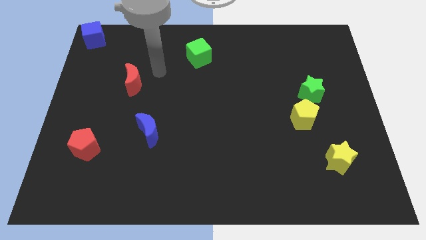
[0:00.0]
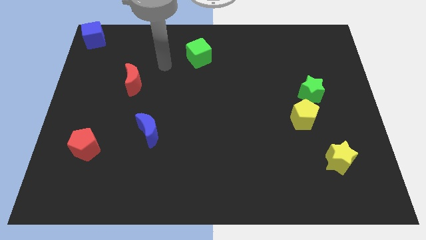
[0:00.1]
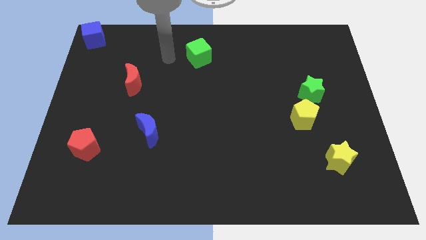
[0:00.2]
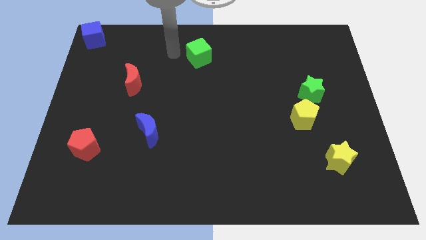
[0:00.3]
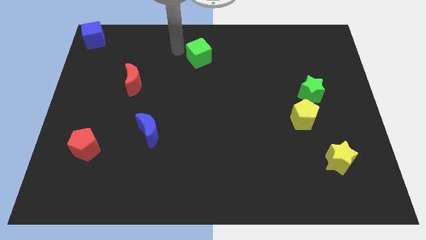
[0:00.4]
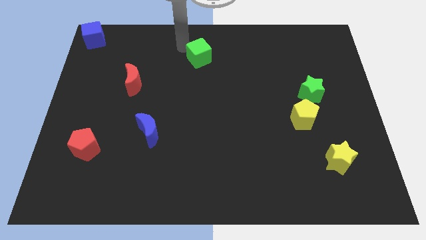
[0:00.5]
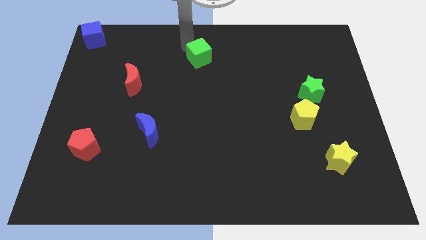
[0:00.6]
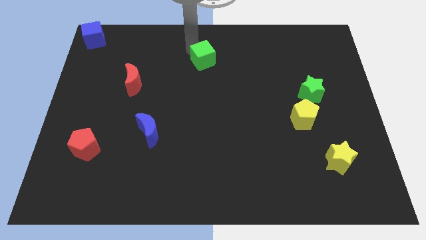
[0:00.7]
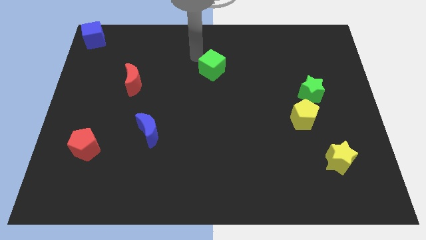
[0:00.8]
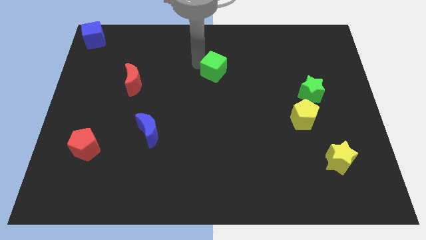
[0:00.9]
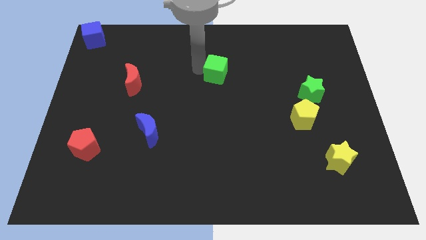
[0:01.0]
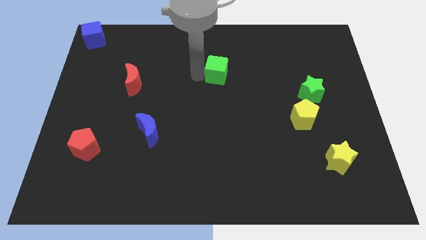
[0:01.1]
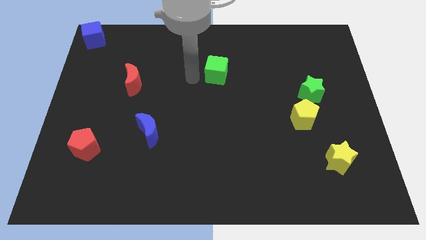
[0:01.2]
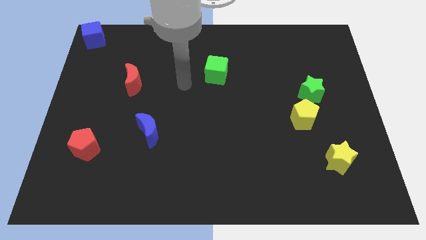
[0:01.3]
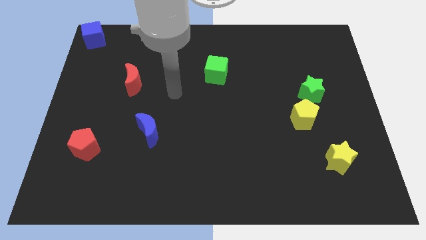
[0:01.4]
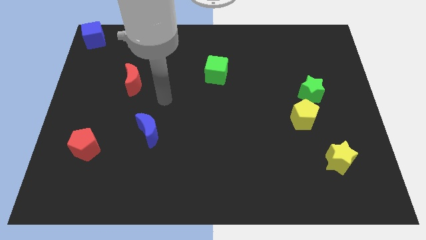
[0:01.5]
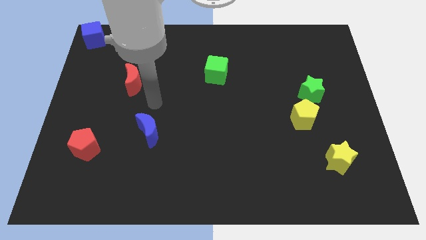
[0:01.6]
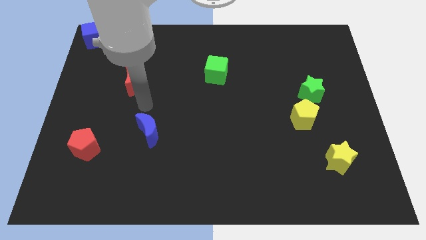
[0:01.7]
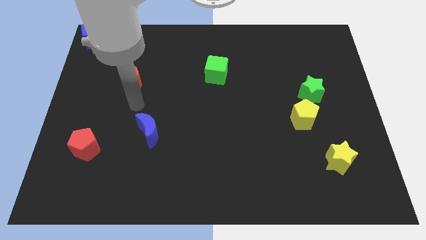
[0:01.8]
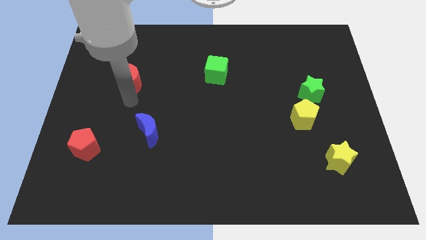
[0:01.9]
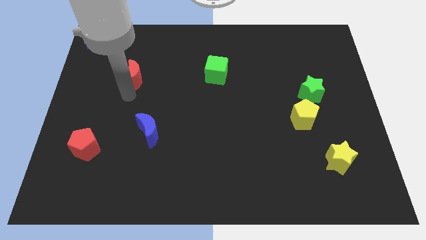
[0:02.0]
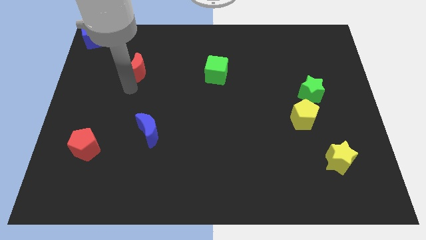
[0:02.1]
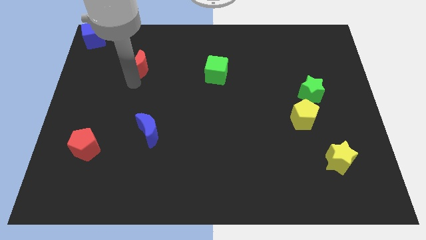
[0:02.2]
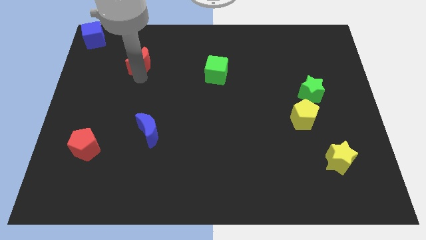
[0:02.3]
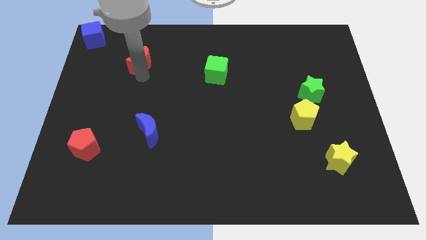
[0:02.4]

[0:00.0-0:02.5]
push the green cube towards the center of the board

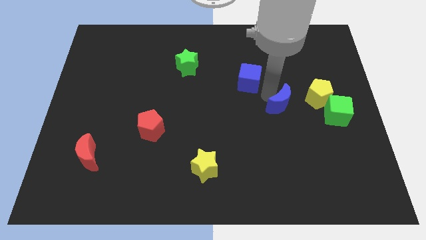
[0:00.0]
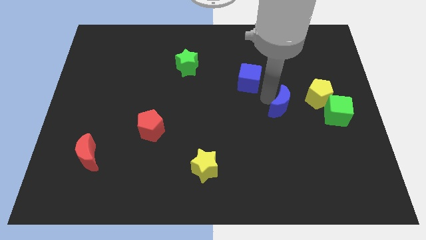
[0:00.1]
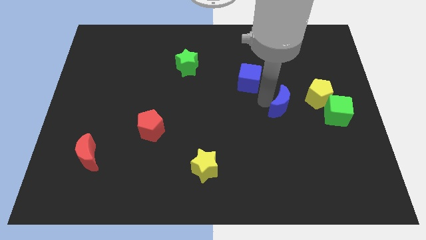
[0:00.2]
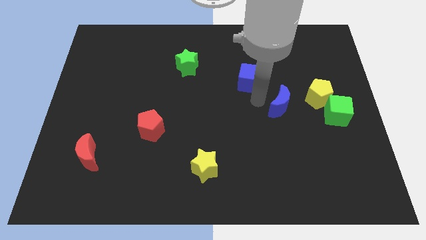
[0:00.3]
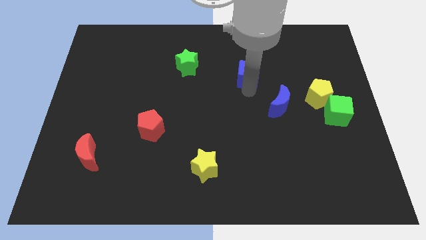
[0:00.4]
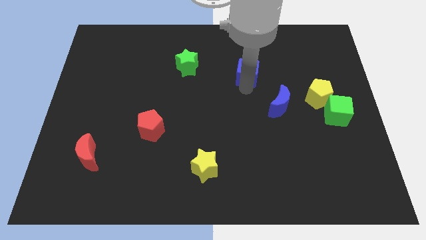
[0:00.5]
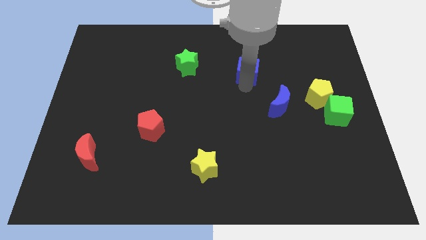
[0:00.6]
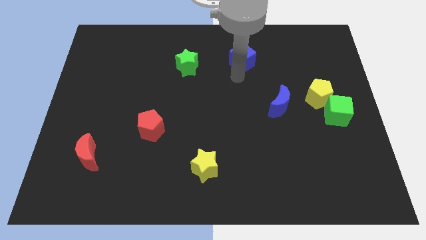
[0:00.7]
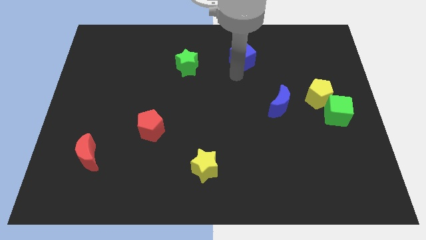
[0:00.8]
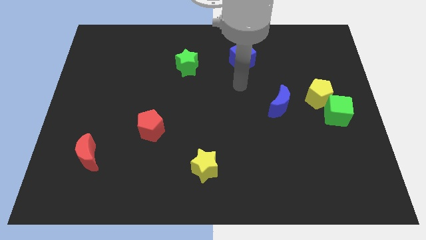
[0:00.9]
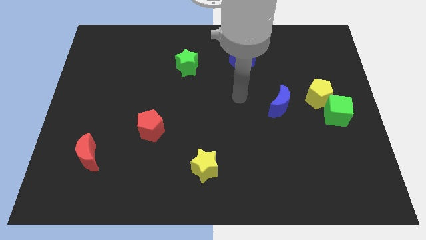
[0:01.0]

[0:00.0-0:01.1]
push the blue cube to the right of the green star

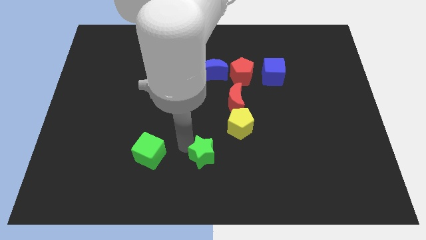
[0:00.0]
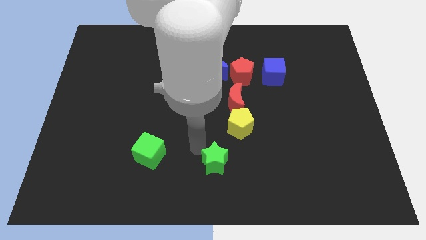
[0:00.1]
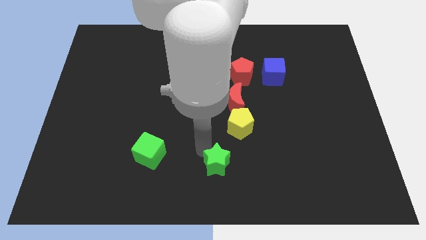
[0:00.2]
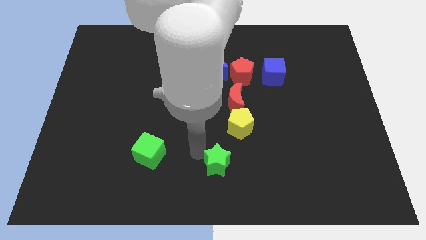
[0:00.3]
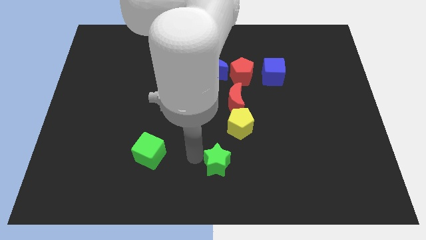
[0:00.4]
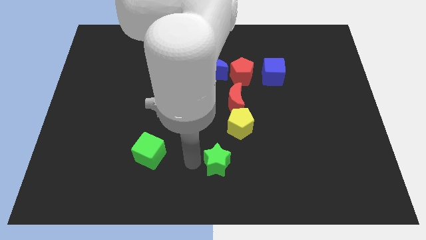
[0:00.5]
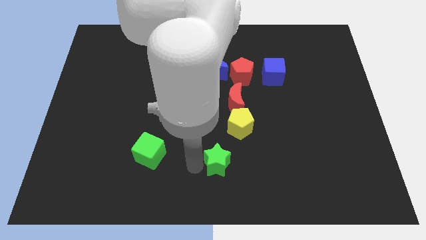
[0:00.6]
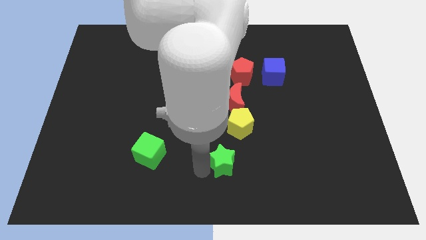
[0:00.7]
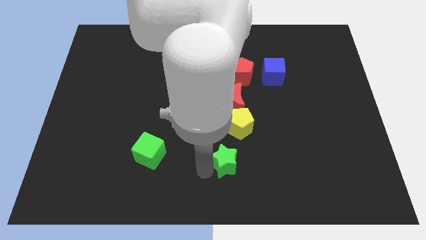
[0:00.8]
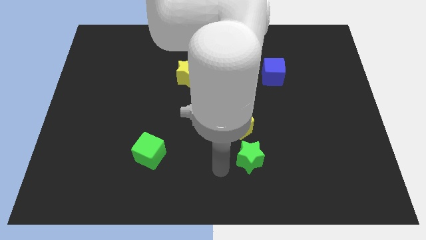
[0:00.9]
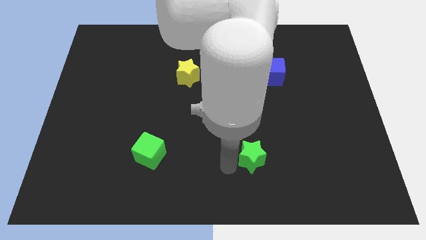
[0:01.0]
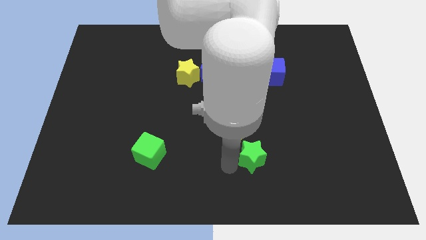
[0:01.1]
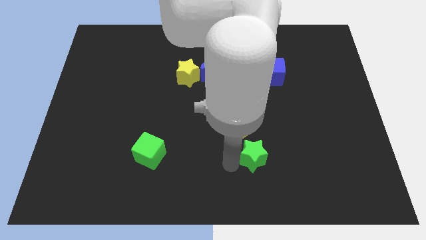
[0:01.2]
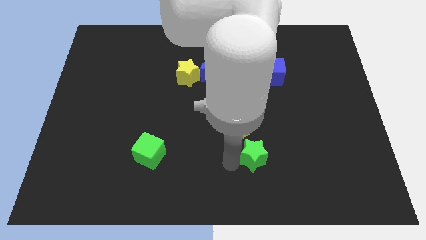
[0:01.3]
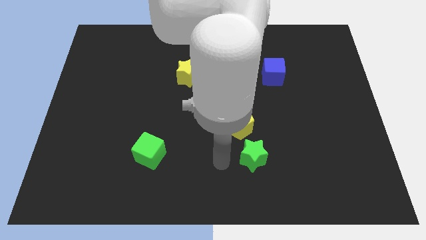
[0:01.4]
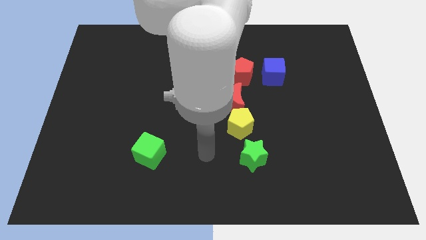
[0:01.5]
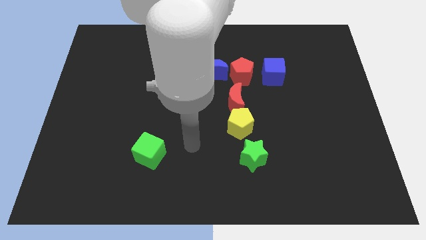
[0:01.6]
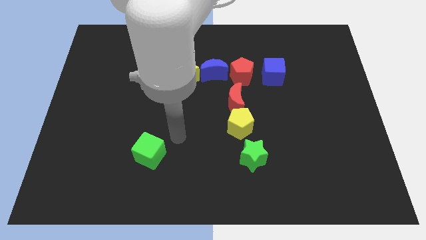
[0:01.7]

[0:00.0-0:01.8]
move the green star to the bottom of the yellow pentagon

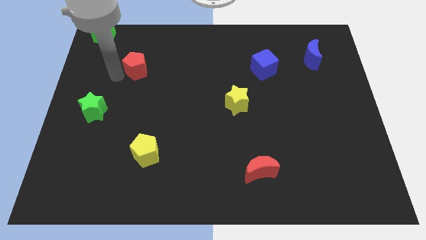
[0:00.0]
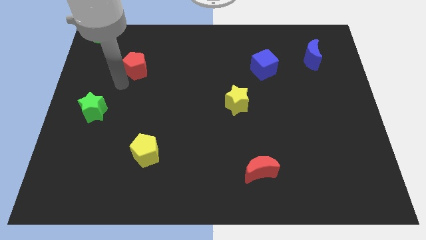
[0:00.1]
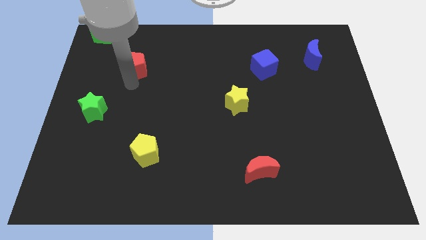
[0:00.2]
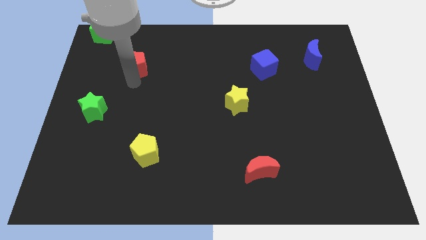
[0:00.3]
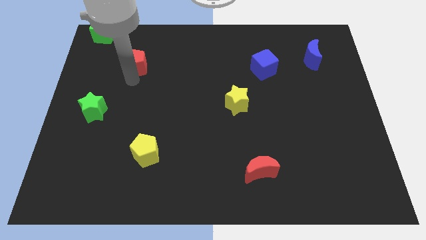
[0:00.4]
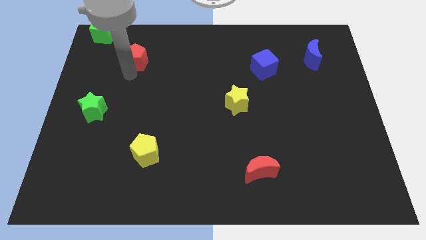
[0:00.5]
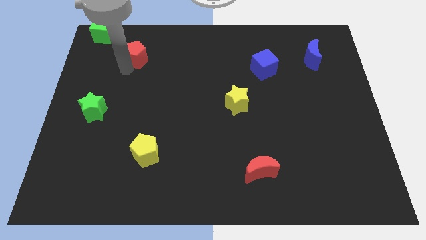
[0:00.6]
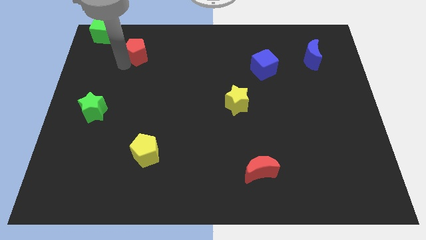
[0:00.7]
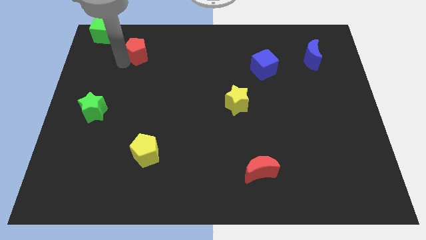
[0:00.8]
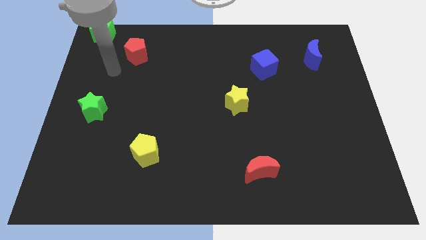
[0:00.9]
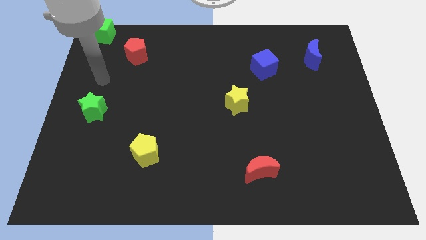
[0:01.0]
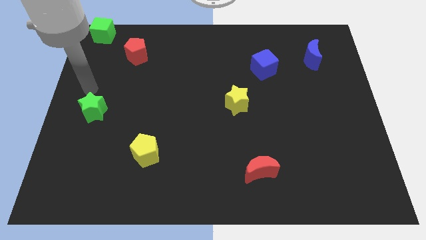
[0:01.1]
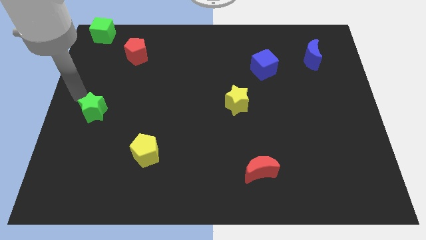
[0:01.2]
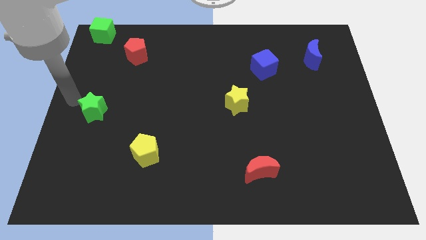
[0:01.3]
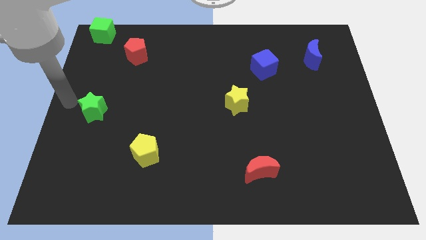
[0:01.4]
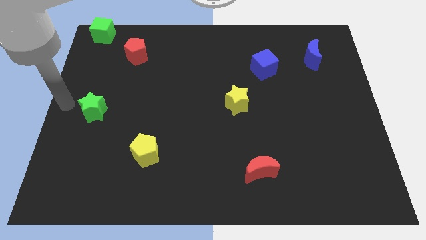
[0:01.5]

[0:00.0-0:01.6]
slightly push the red pentagon upwards

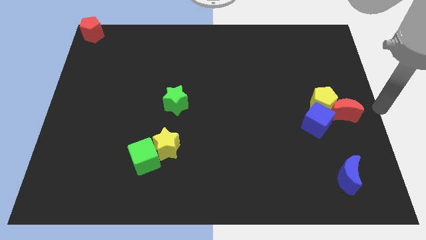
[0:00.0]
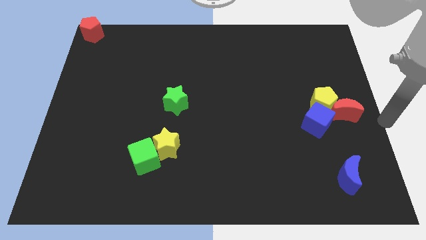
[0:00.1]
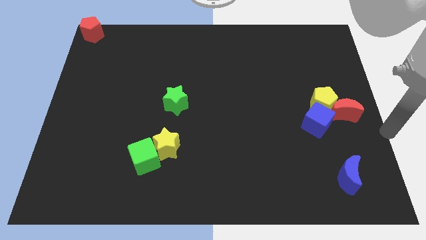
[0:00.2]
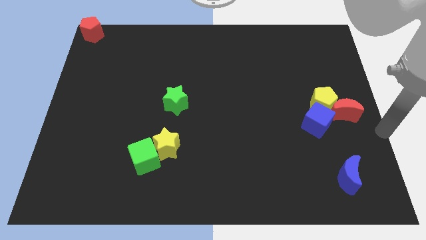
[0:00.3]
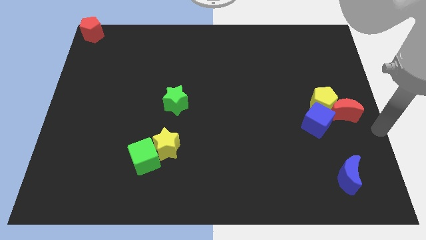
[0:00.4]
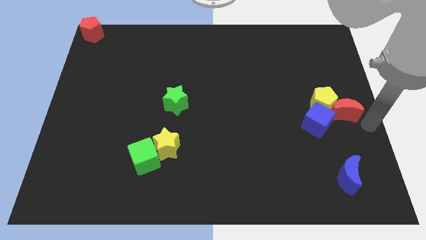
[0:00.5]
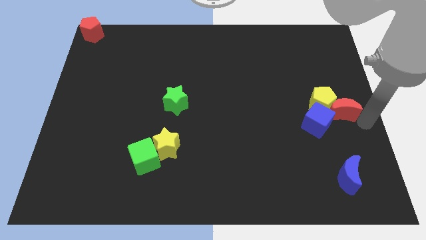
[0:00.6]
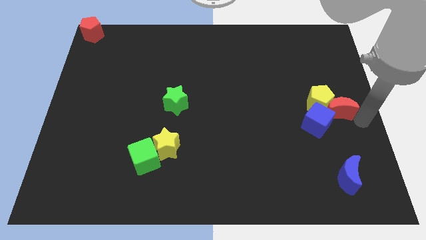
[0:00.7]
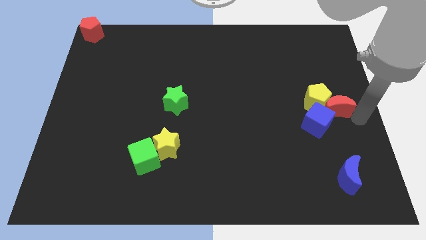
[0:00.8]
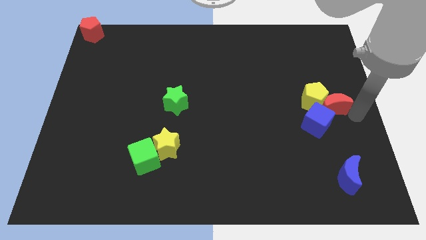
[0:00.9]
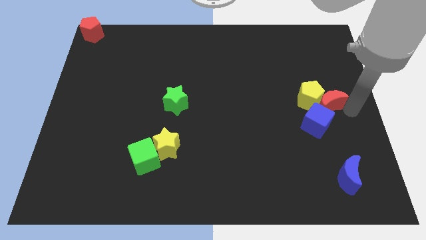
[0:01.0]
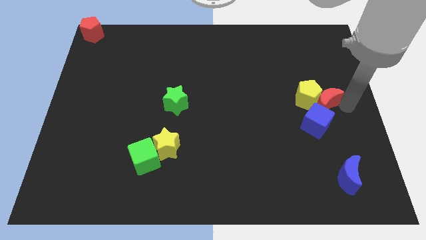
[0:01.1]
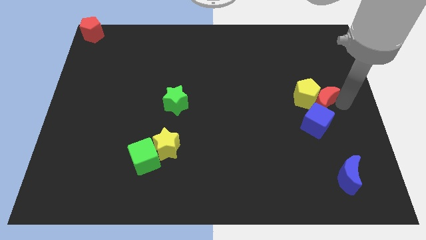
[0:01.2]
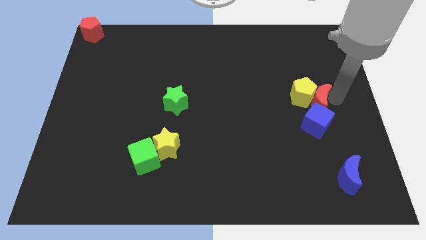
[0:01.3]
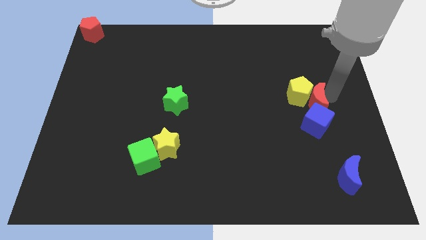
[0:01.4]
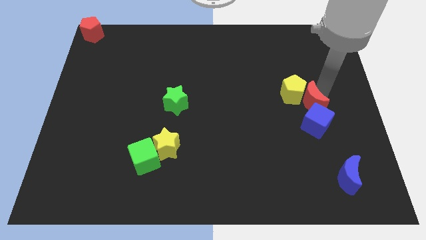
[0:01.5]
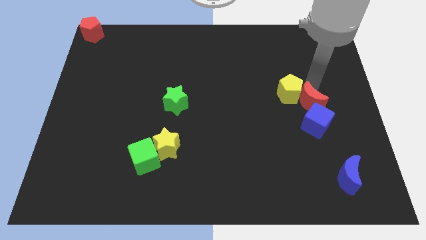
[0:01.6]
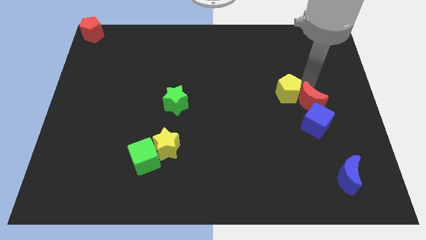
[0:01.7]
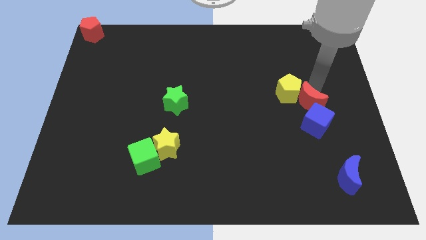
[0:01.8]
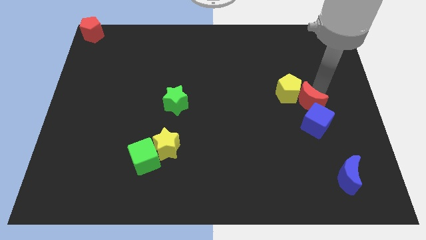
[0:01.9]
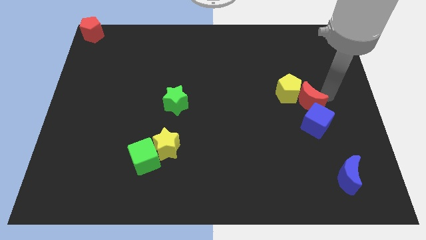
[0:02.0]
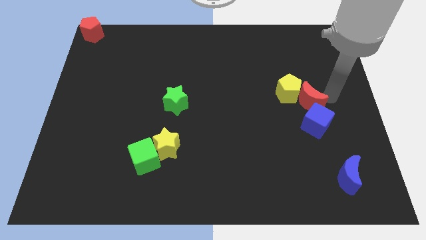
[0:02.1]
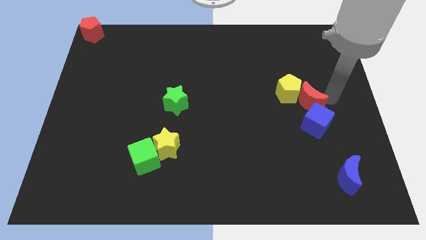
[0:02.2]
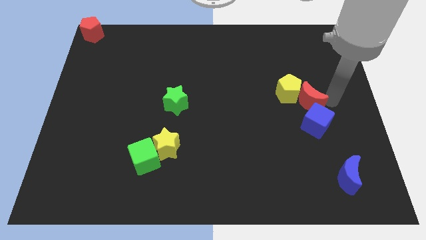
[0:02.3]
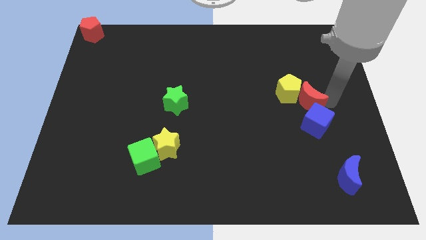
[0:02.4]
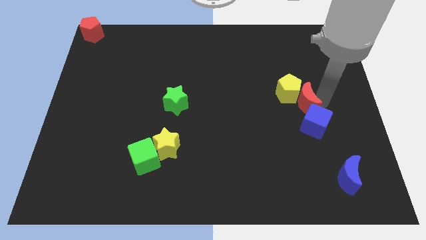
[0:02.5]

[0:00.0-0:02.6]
place red moon to the top of blue cube
